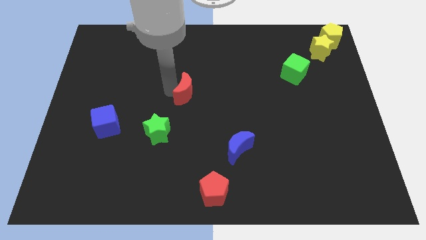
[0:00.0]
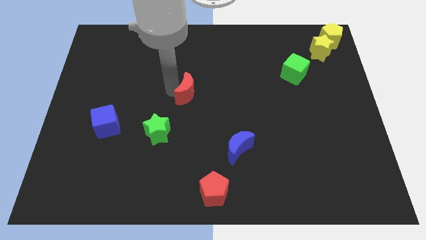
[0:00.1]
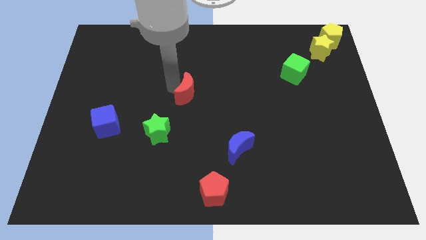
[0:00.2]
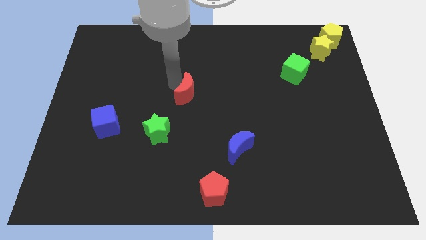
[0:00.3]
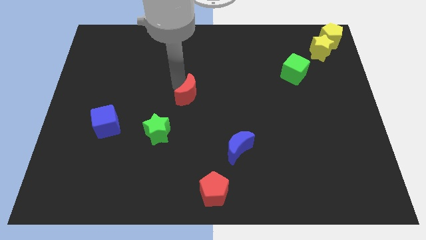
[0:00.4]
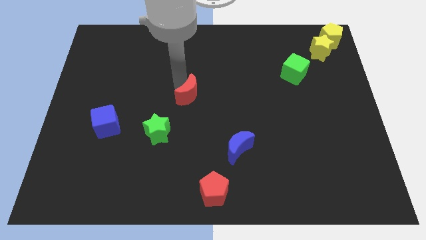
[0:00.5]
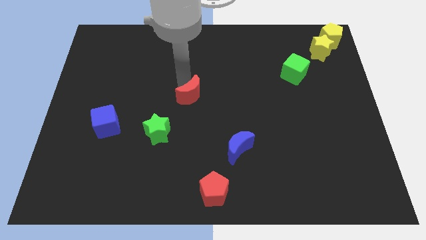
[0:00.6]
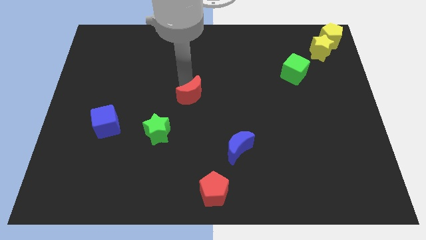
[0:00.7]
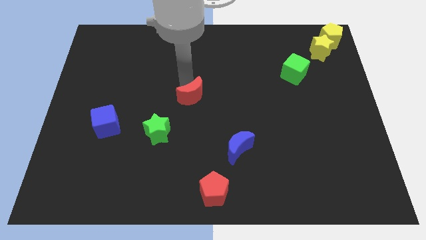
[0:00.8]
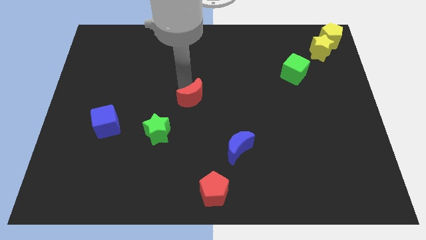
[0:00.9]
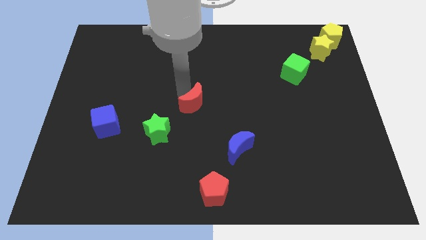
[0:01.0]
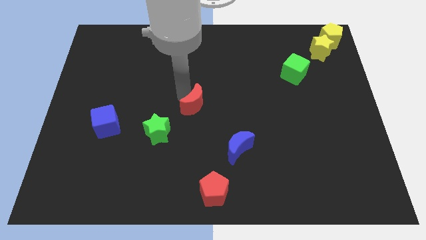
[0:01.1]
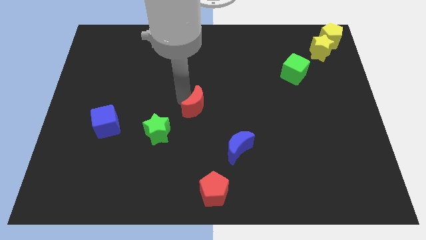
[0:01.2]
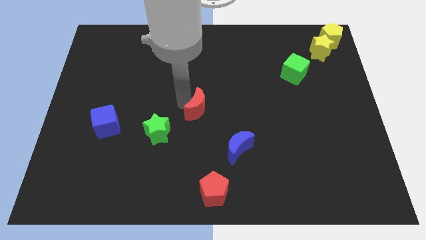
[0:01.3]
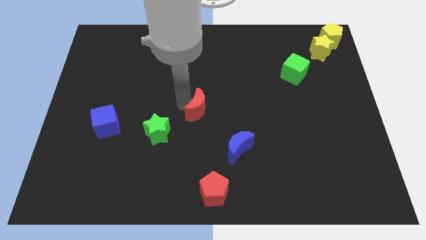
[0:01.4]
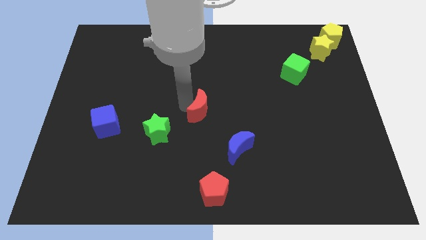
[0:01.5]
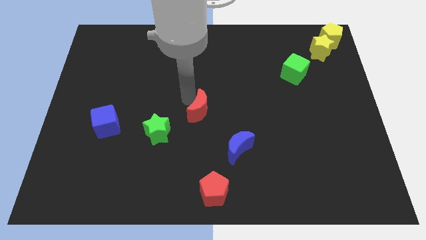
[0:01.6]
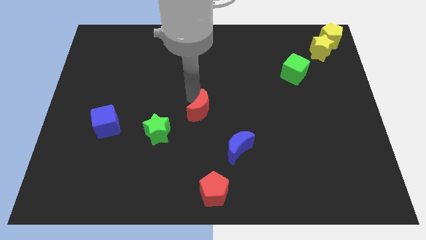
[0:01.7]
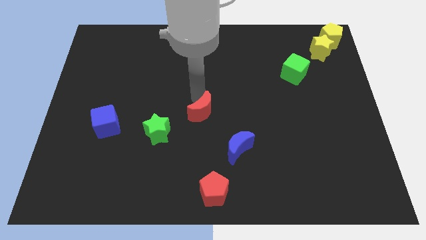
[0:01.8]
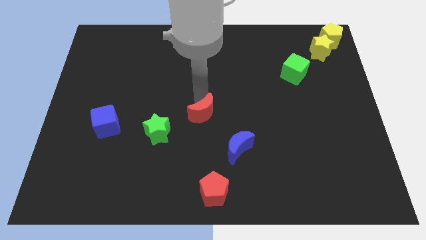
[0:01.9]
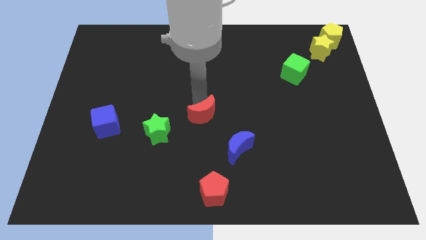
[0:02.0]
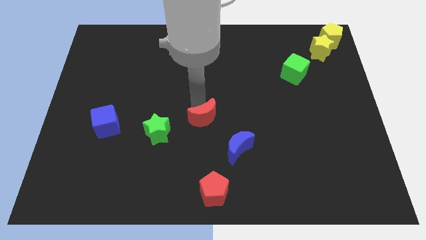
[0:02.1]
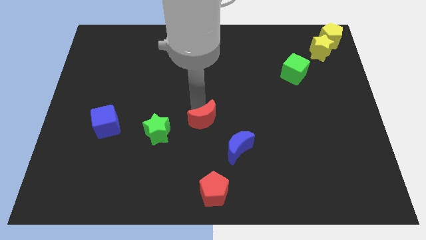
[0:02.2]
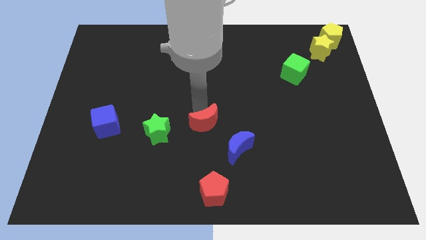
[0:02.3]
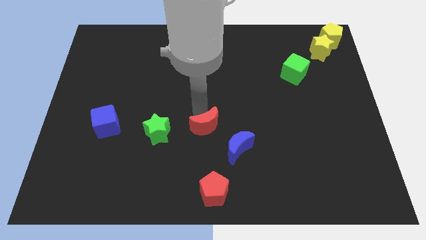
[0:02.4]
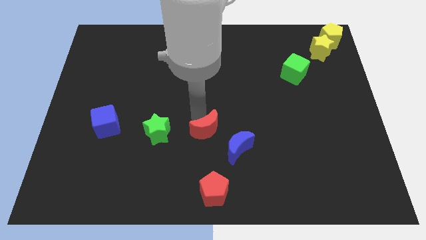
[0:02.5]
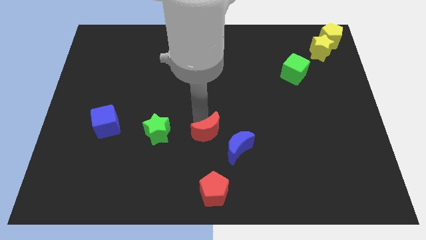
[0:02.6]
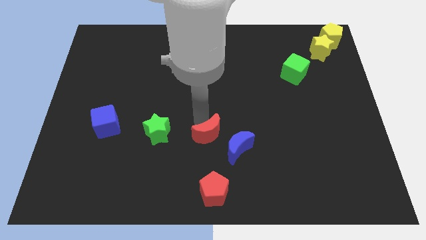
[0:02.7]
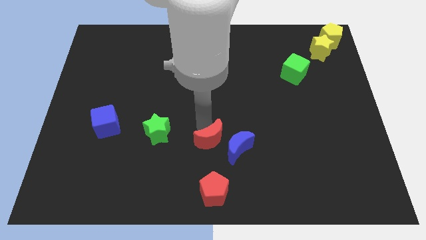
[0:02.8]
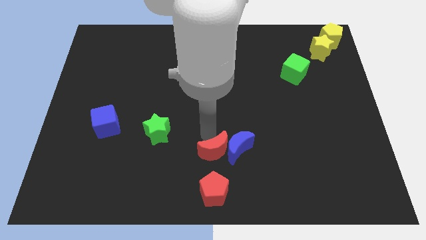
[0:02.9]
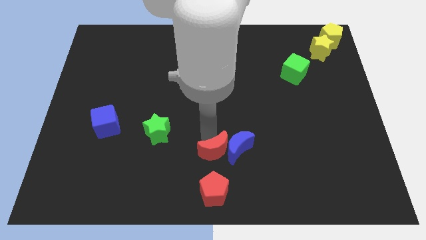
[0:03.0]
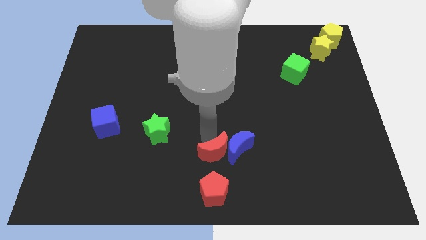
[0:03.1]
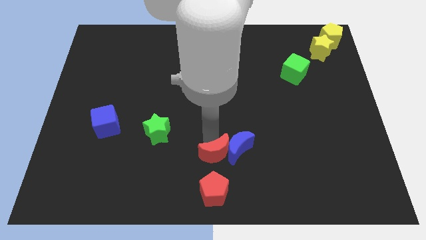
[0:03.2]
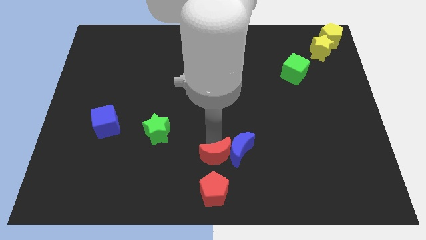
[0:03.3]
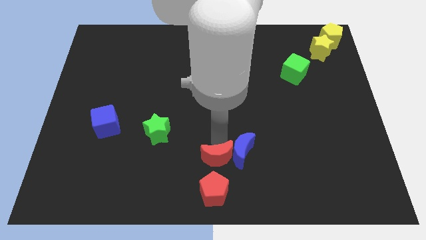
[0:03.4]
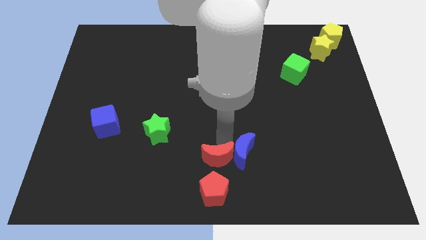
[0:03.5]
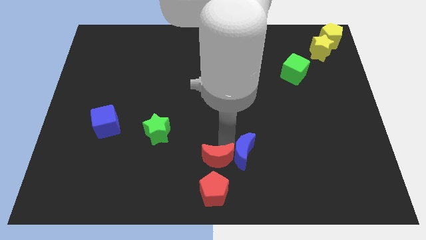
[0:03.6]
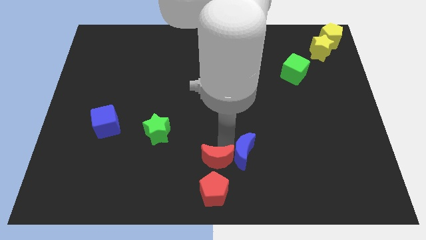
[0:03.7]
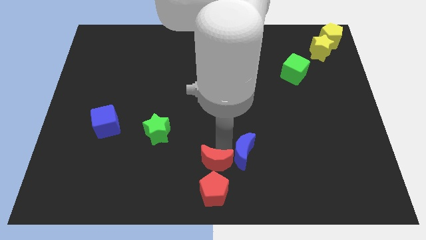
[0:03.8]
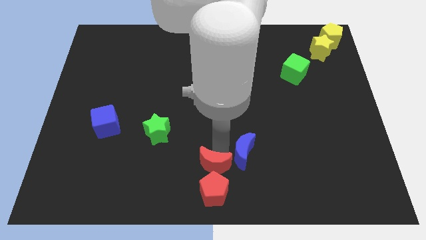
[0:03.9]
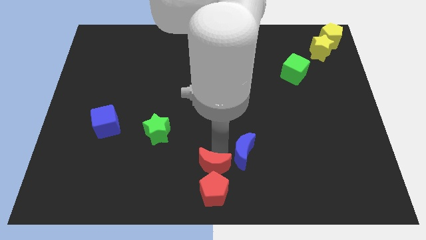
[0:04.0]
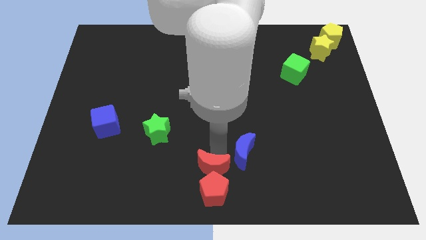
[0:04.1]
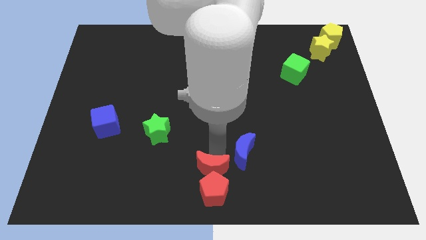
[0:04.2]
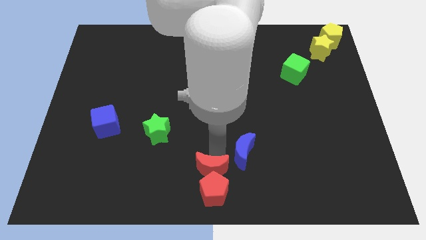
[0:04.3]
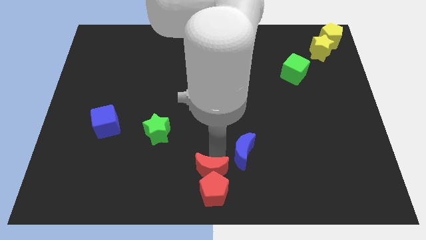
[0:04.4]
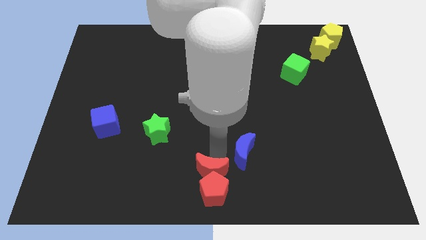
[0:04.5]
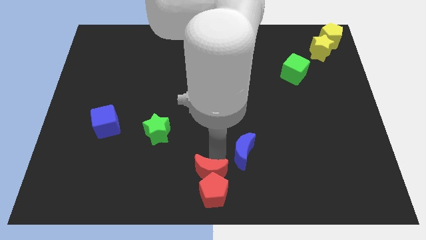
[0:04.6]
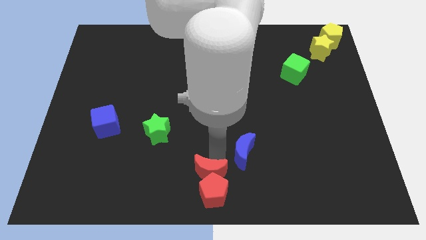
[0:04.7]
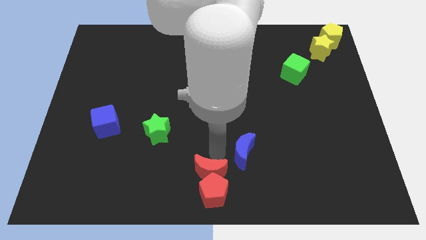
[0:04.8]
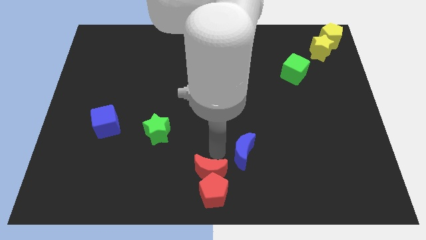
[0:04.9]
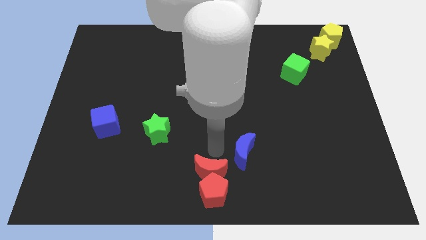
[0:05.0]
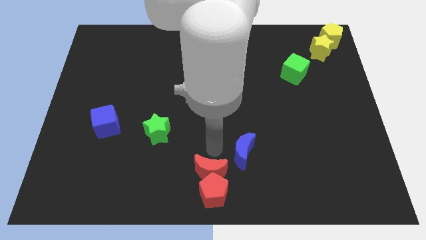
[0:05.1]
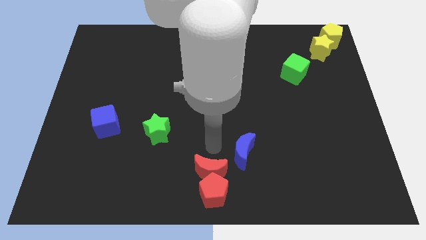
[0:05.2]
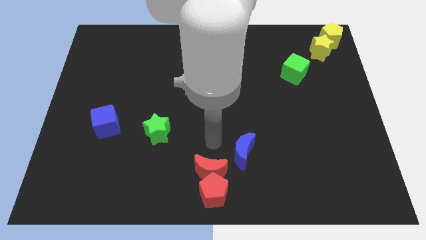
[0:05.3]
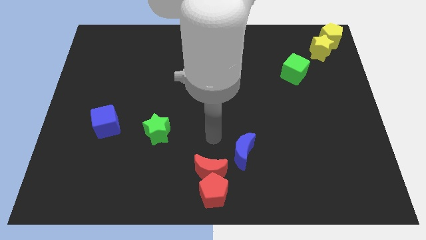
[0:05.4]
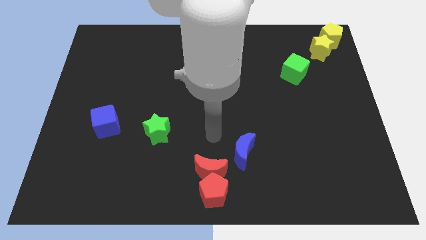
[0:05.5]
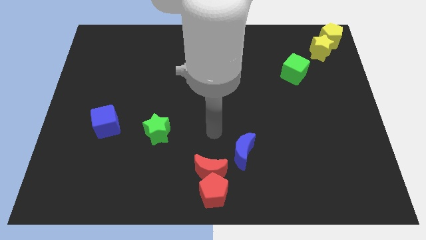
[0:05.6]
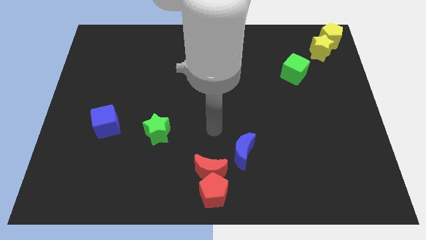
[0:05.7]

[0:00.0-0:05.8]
move the red moon into the red pentagon

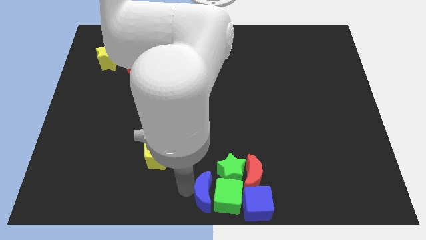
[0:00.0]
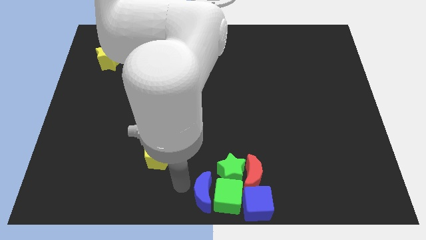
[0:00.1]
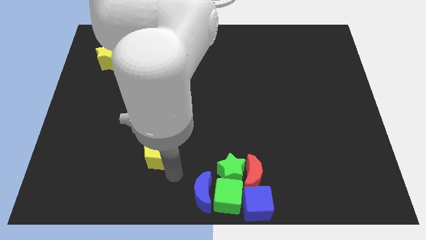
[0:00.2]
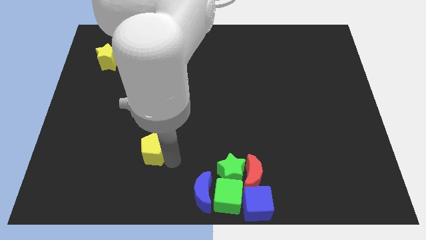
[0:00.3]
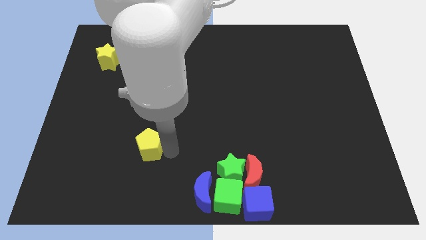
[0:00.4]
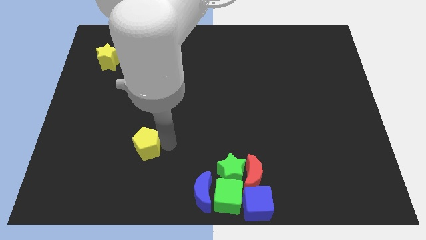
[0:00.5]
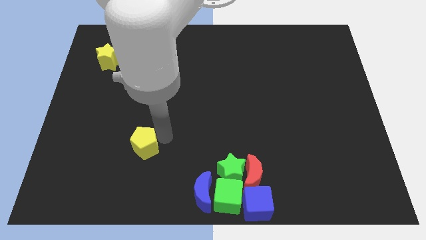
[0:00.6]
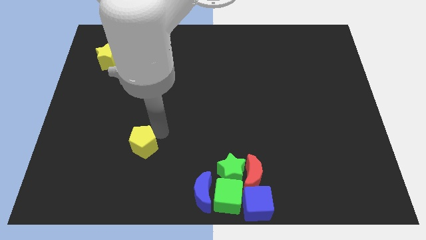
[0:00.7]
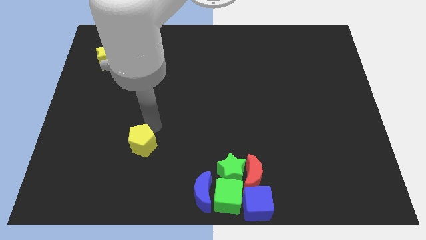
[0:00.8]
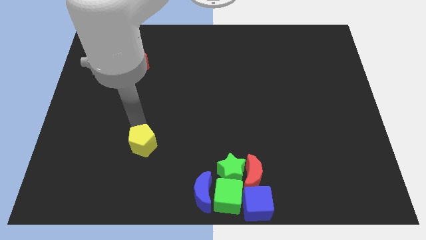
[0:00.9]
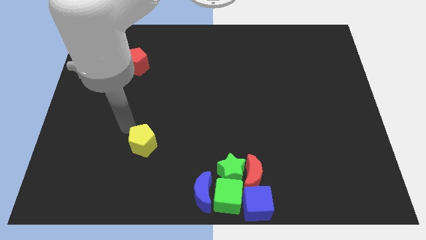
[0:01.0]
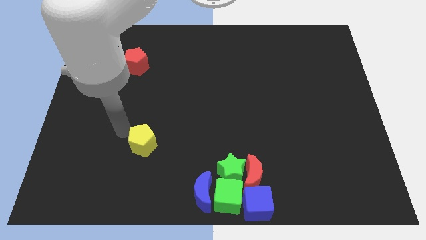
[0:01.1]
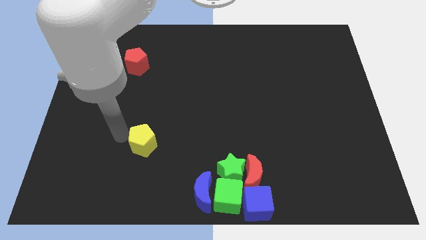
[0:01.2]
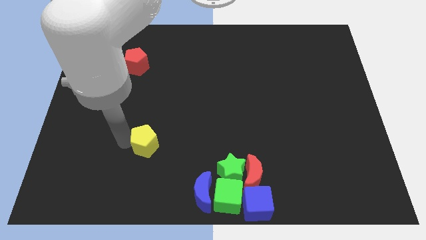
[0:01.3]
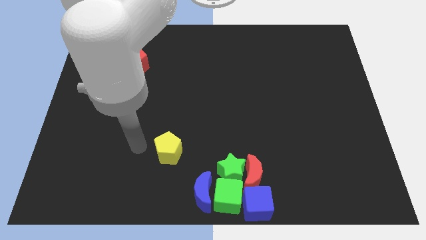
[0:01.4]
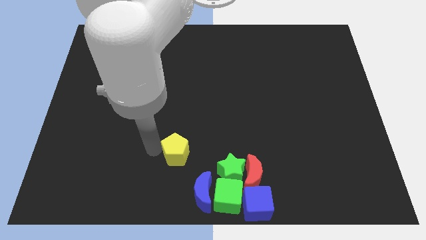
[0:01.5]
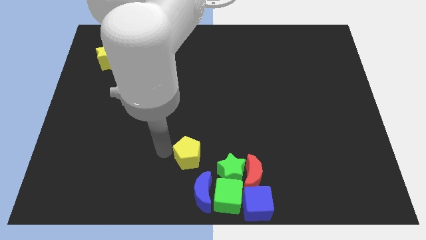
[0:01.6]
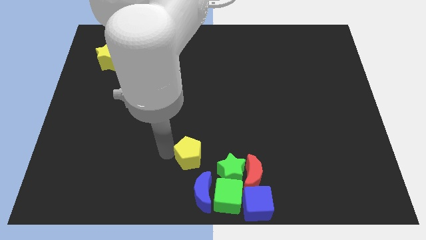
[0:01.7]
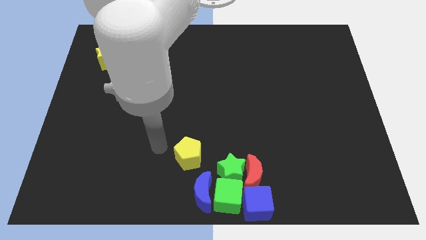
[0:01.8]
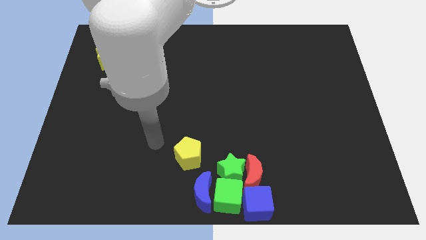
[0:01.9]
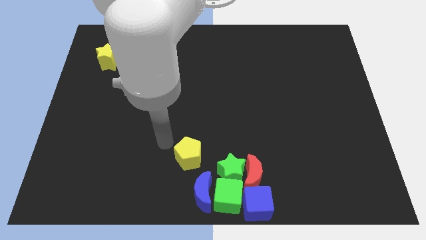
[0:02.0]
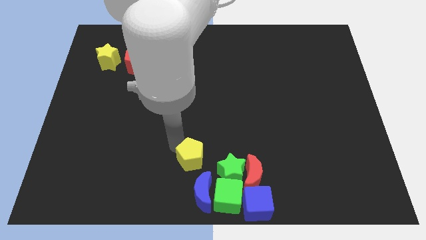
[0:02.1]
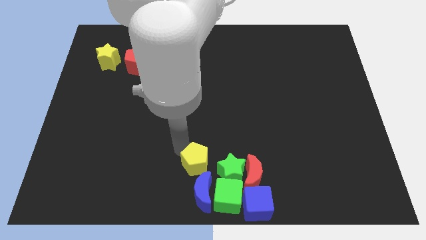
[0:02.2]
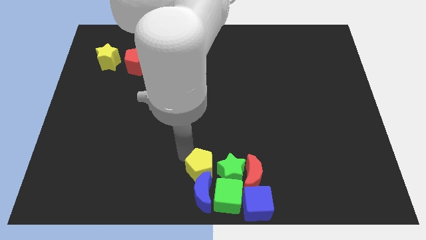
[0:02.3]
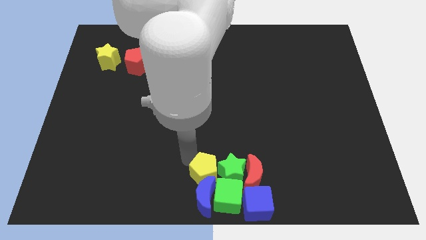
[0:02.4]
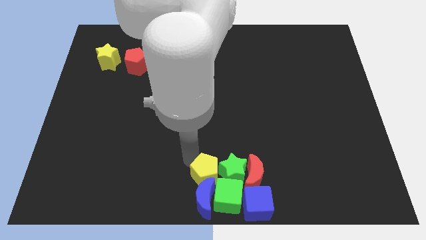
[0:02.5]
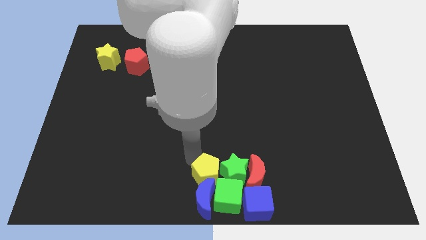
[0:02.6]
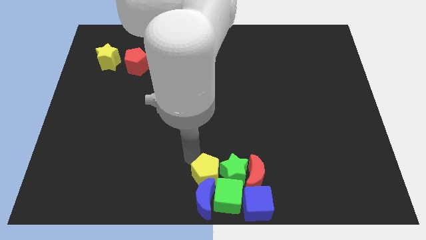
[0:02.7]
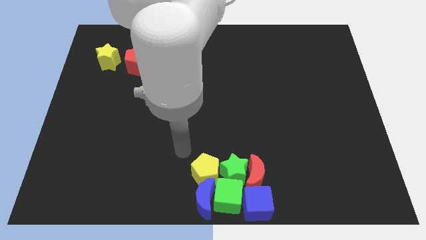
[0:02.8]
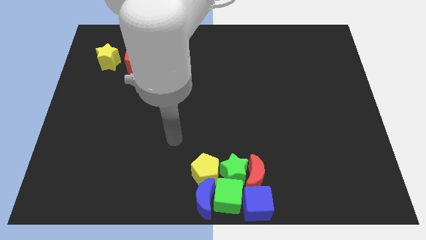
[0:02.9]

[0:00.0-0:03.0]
place the yellow pentagon to the left of the green star
